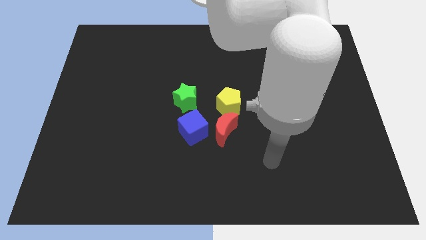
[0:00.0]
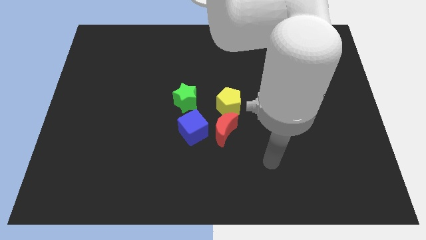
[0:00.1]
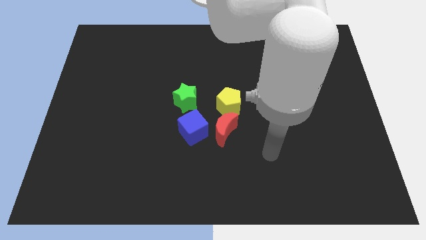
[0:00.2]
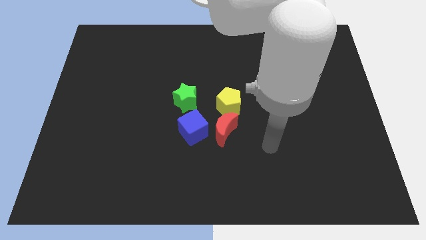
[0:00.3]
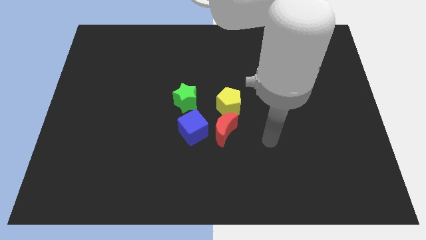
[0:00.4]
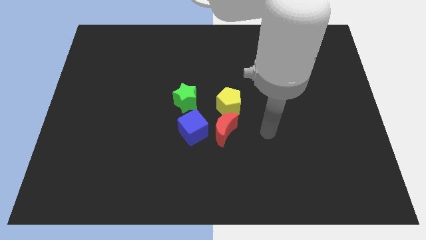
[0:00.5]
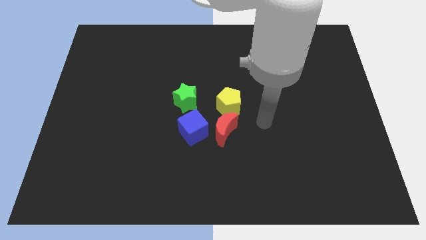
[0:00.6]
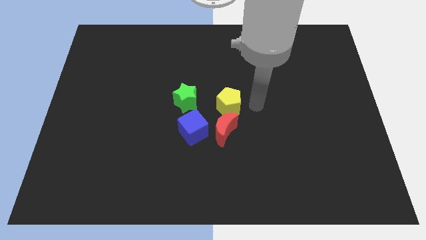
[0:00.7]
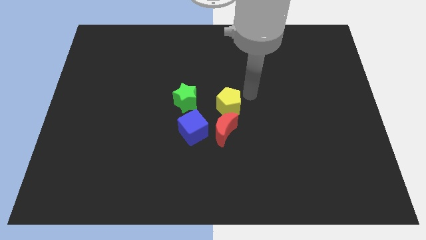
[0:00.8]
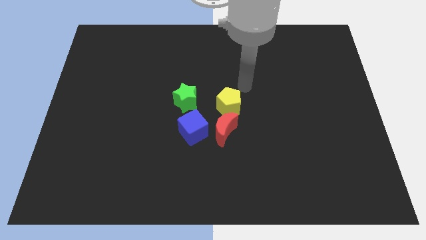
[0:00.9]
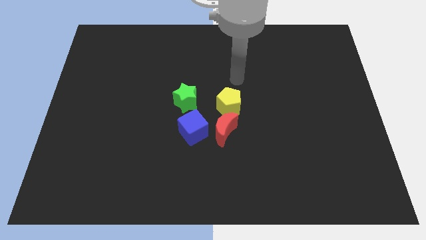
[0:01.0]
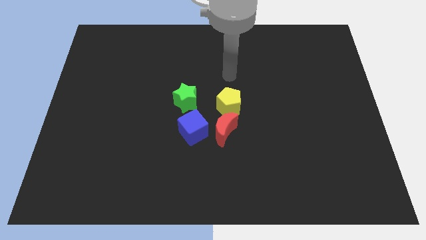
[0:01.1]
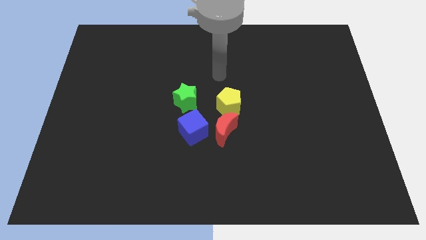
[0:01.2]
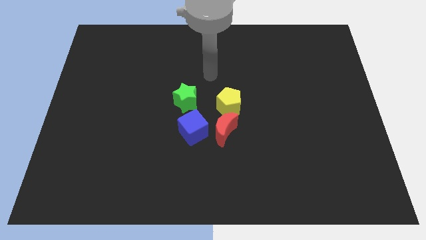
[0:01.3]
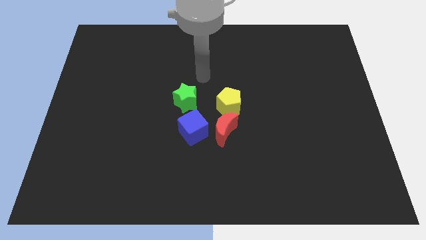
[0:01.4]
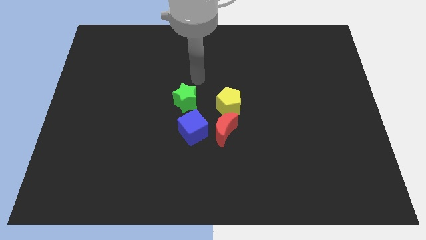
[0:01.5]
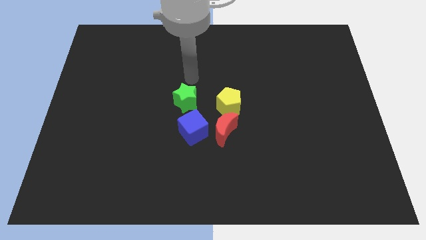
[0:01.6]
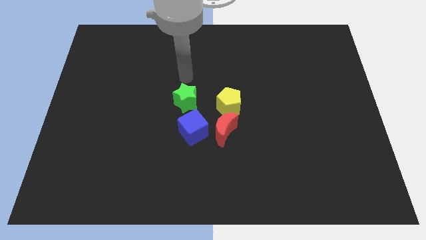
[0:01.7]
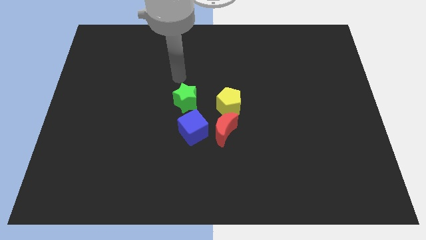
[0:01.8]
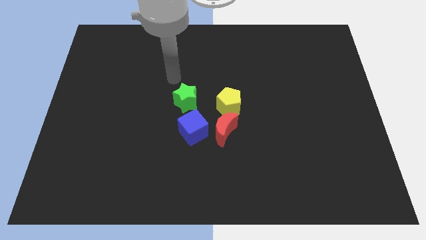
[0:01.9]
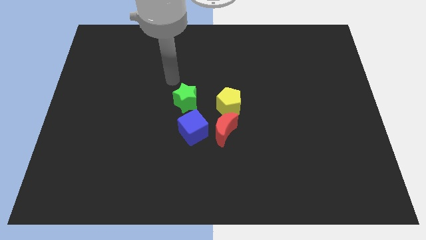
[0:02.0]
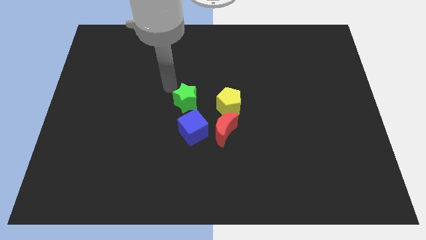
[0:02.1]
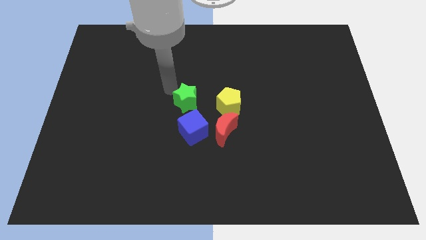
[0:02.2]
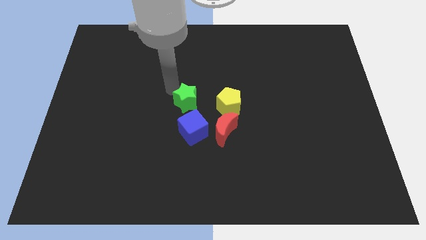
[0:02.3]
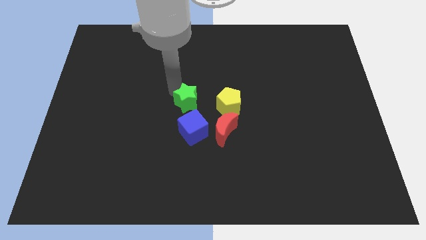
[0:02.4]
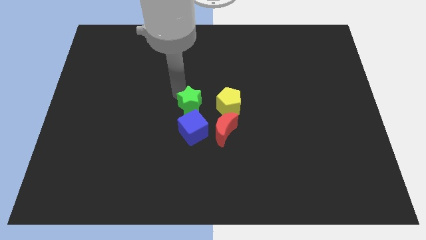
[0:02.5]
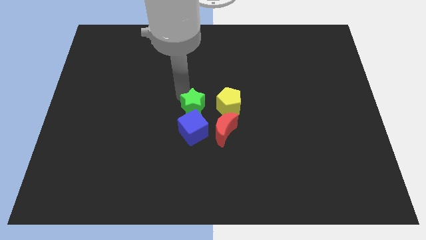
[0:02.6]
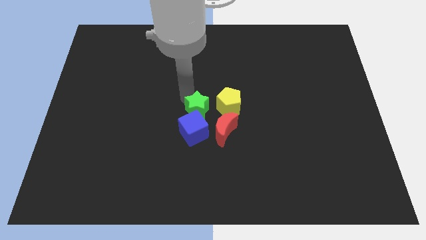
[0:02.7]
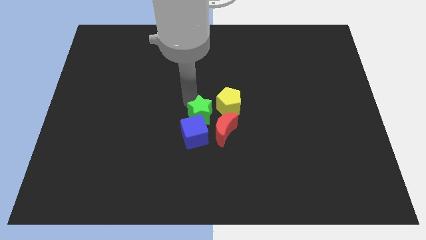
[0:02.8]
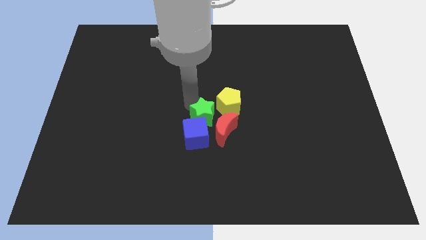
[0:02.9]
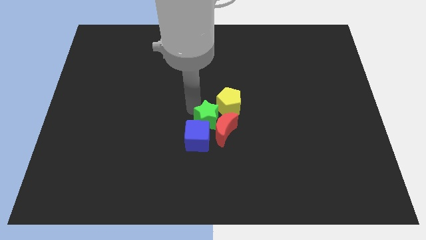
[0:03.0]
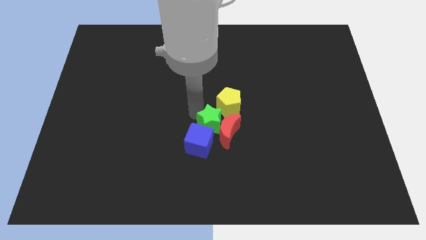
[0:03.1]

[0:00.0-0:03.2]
push the green star close to the red block

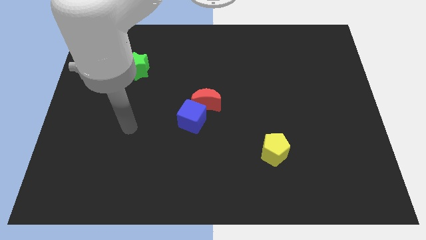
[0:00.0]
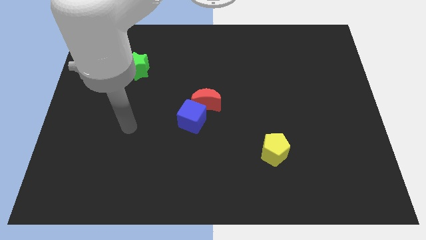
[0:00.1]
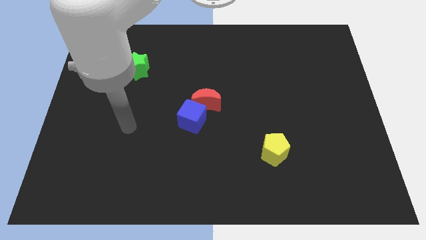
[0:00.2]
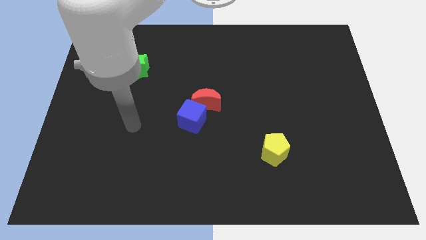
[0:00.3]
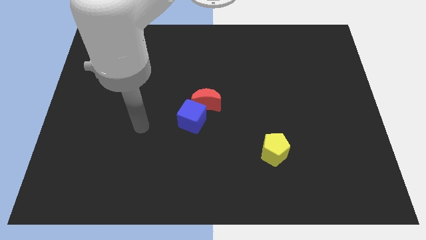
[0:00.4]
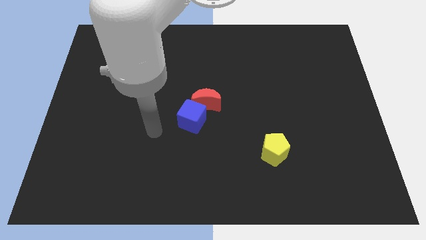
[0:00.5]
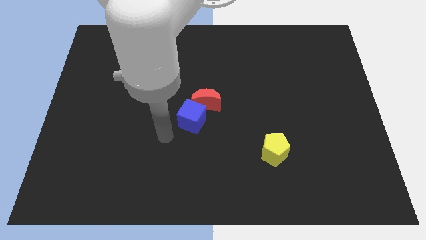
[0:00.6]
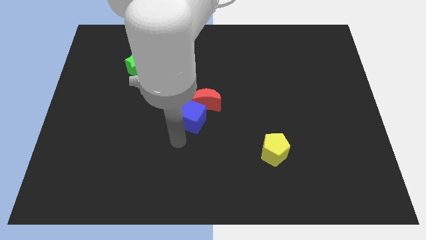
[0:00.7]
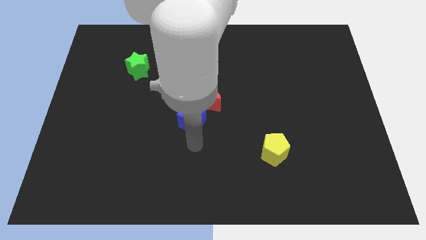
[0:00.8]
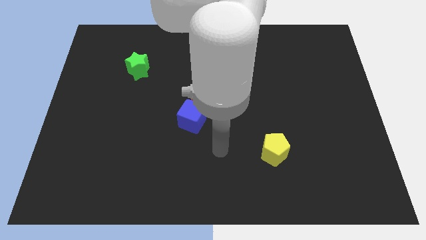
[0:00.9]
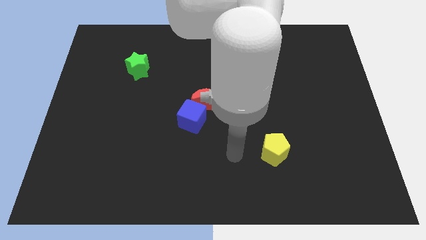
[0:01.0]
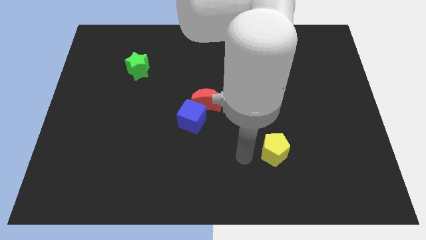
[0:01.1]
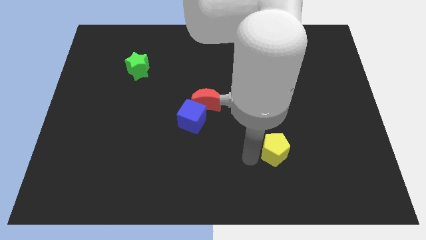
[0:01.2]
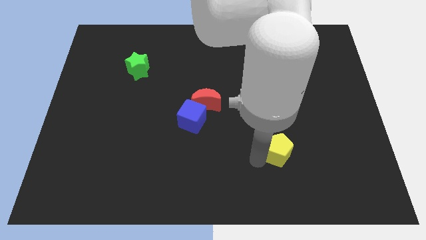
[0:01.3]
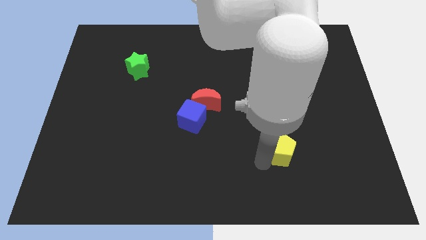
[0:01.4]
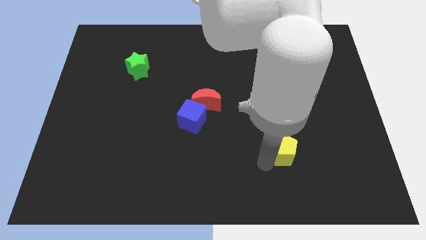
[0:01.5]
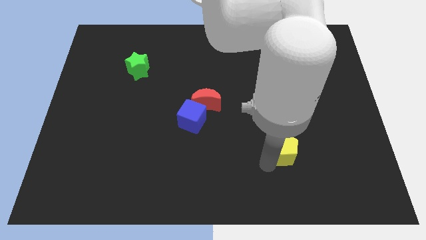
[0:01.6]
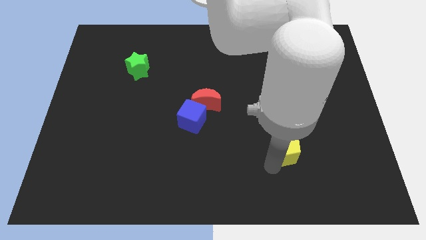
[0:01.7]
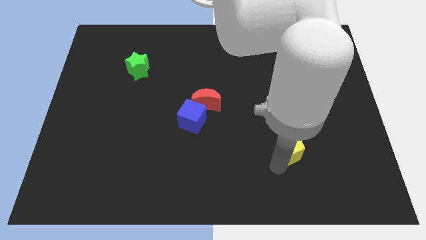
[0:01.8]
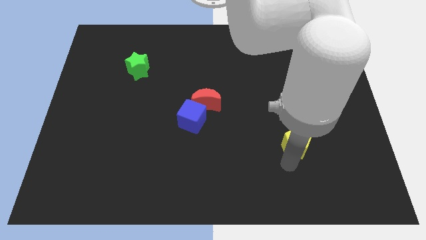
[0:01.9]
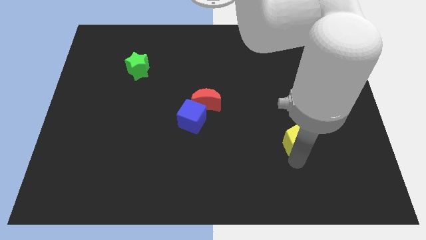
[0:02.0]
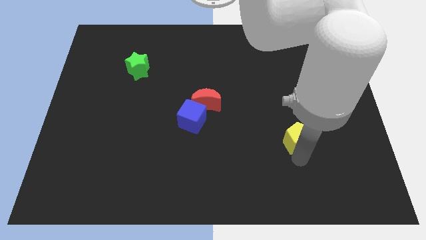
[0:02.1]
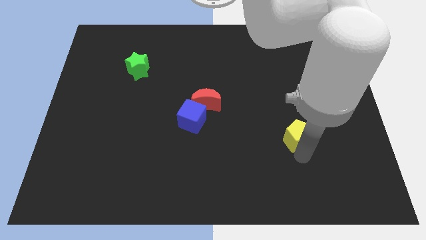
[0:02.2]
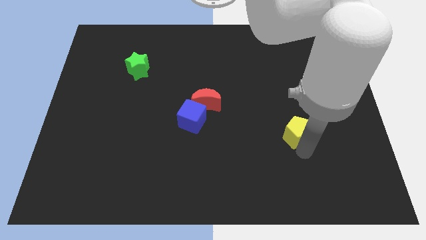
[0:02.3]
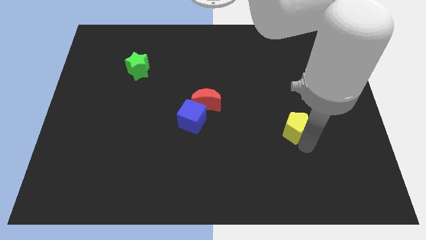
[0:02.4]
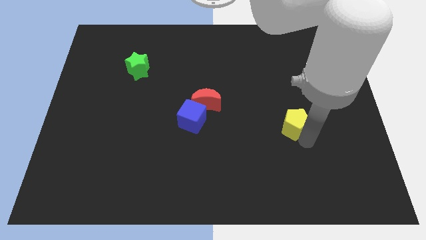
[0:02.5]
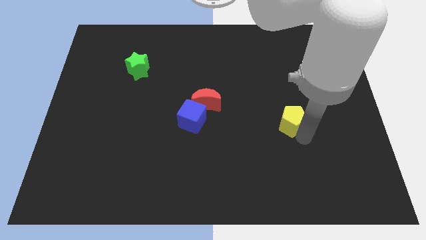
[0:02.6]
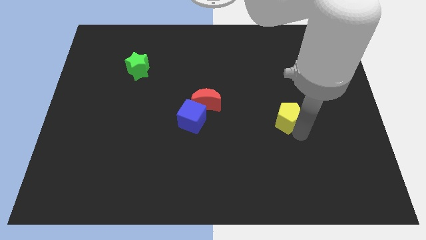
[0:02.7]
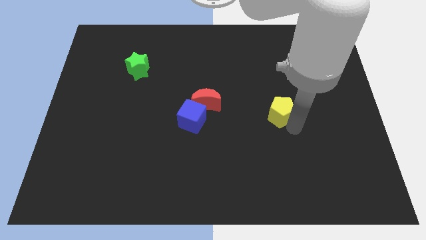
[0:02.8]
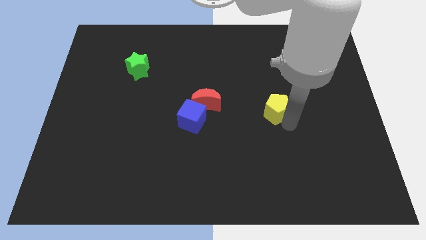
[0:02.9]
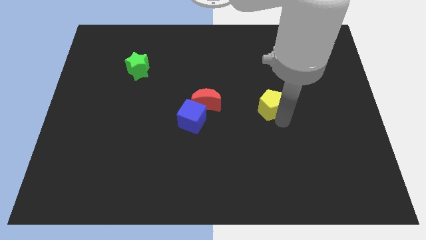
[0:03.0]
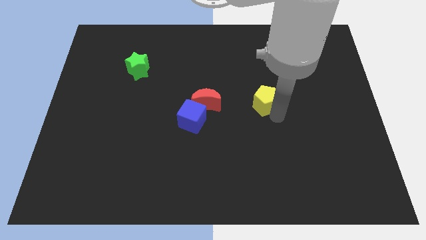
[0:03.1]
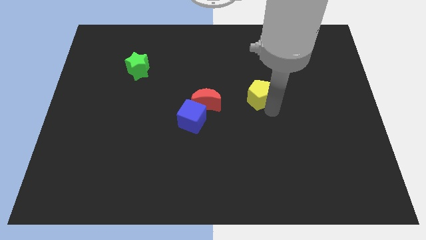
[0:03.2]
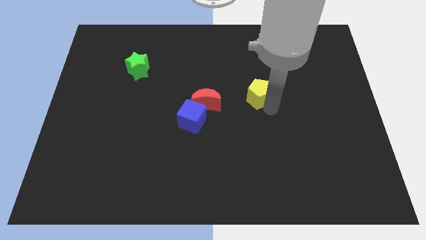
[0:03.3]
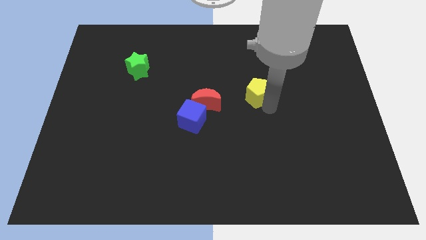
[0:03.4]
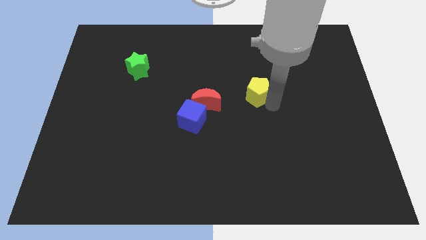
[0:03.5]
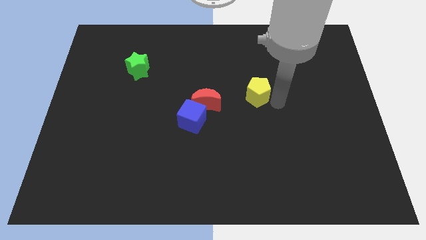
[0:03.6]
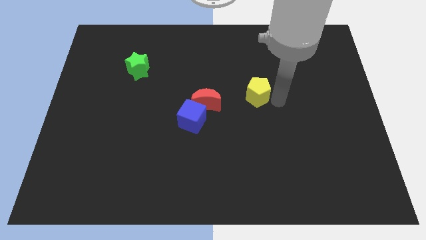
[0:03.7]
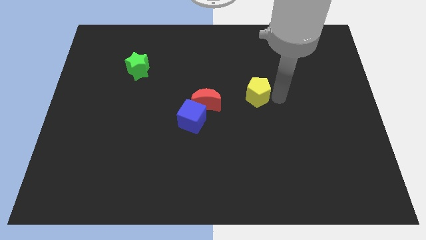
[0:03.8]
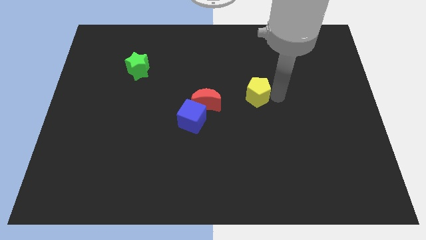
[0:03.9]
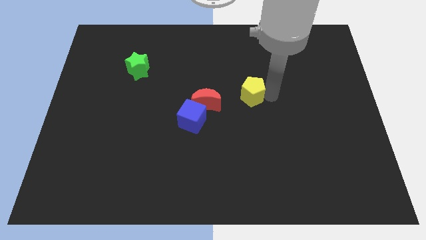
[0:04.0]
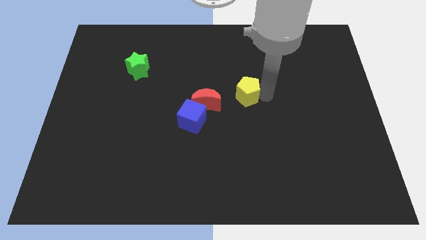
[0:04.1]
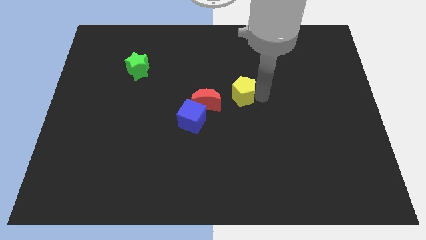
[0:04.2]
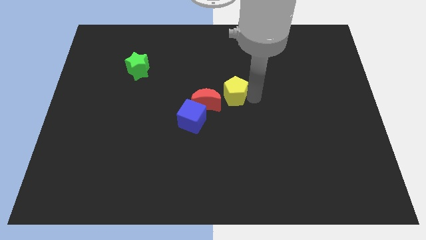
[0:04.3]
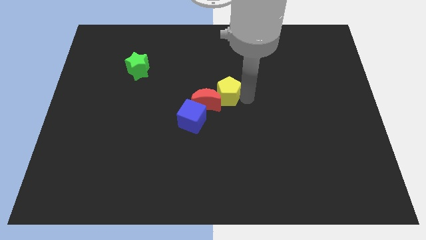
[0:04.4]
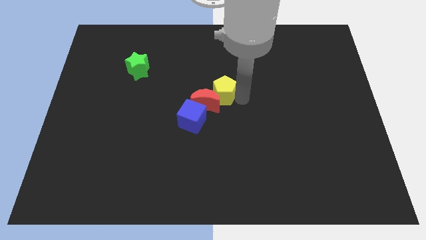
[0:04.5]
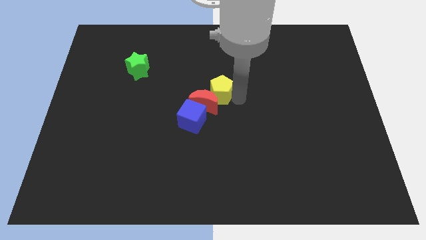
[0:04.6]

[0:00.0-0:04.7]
put the yellow pentagon next to the moon

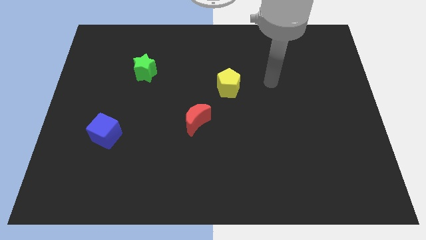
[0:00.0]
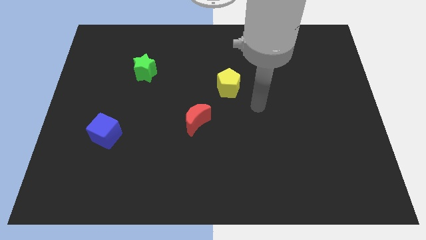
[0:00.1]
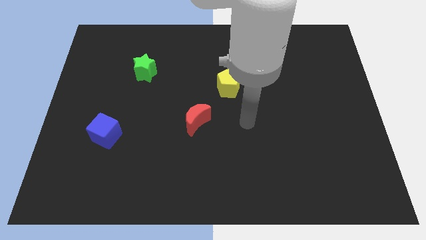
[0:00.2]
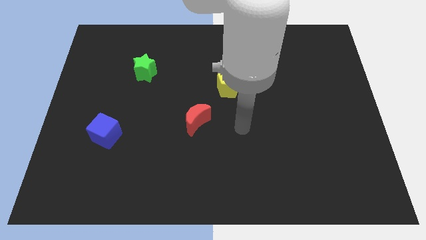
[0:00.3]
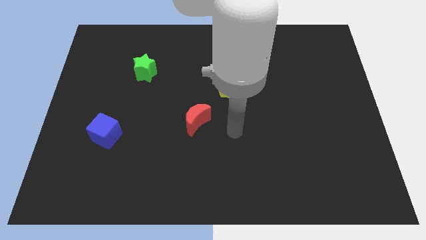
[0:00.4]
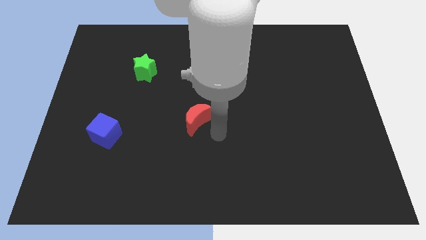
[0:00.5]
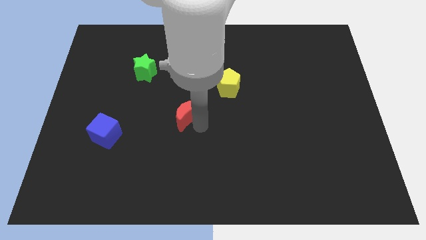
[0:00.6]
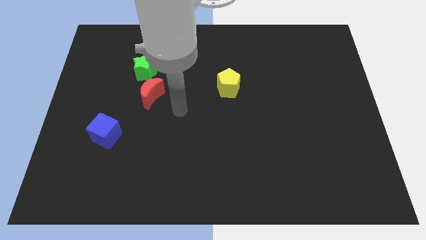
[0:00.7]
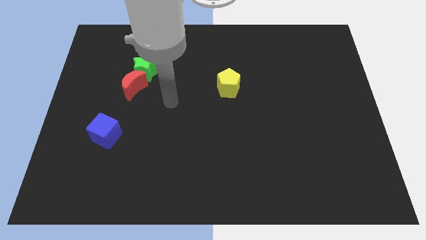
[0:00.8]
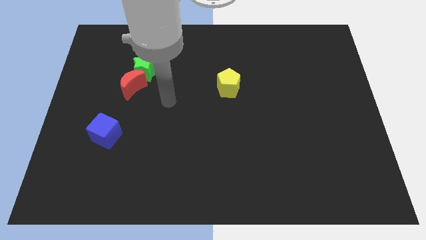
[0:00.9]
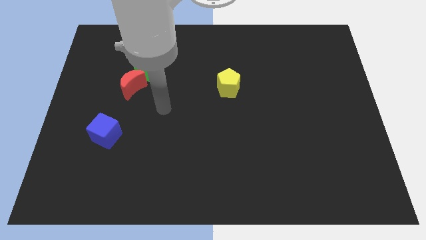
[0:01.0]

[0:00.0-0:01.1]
move the moon towards the green block
